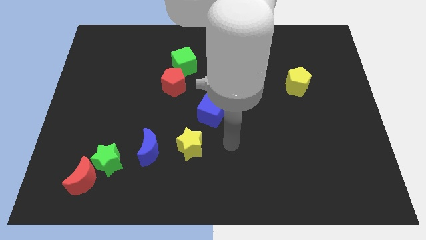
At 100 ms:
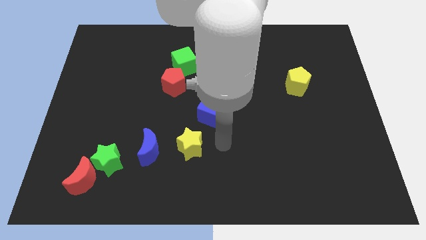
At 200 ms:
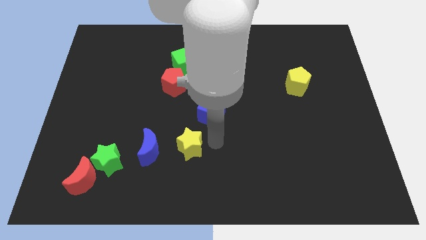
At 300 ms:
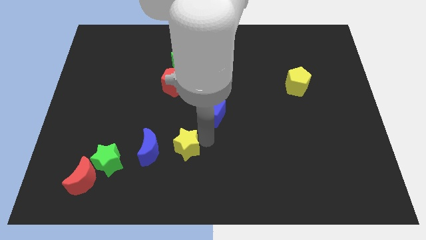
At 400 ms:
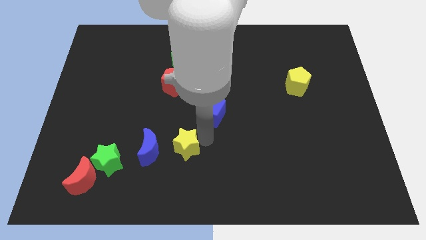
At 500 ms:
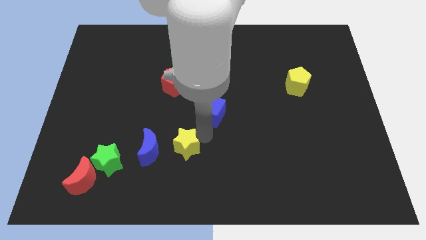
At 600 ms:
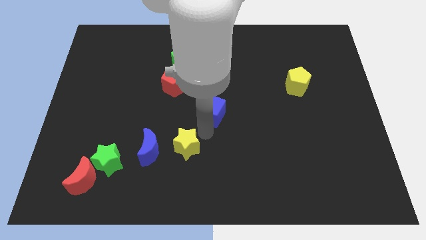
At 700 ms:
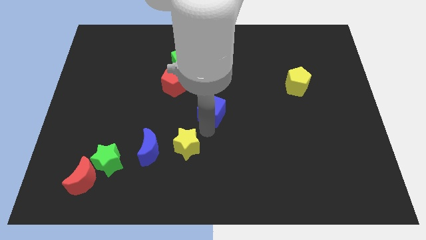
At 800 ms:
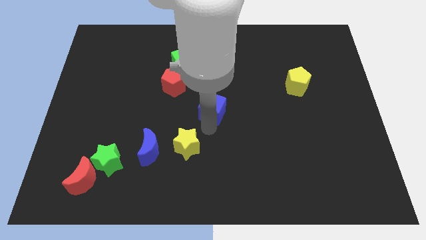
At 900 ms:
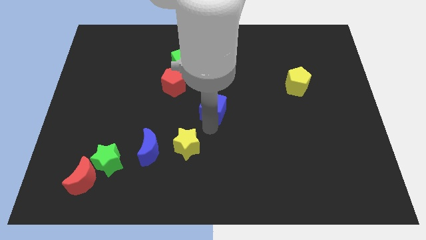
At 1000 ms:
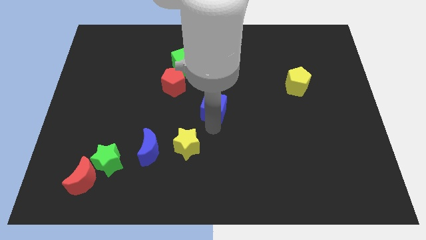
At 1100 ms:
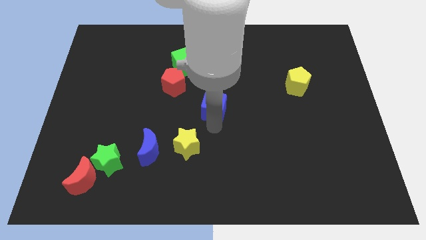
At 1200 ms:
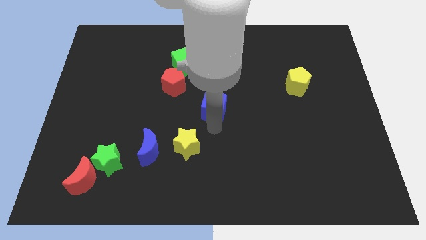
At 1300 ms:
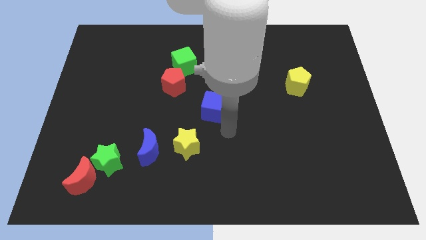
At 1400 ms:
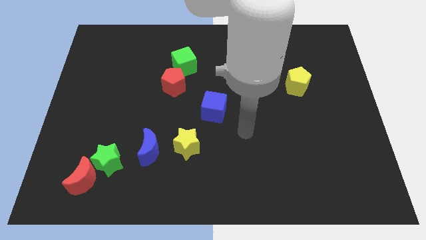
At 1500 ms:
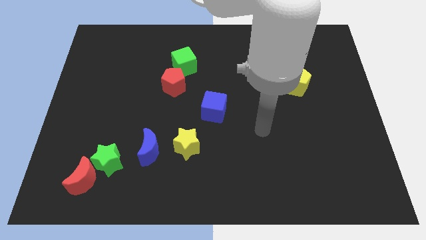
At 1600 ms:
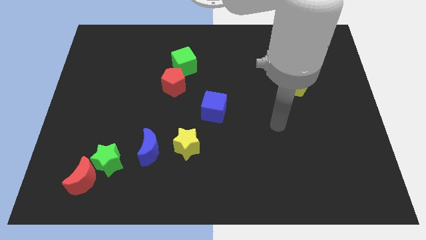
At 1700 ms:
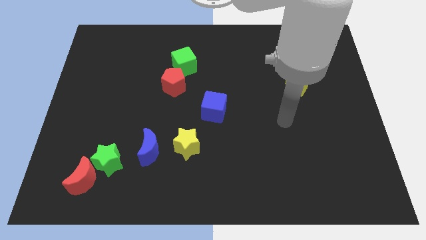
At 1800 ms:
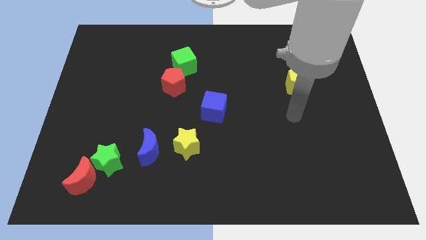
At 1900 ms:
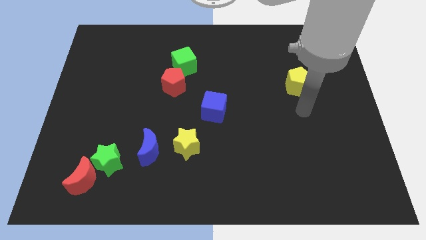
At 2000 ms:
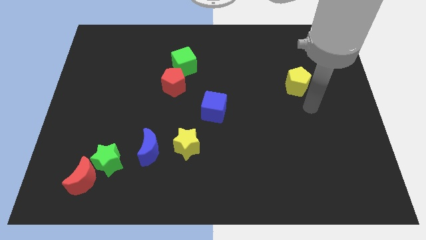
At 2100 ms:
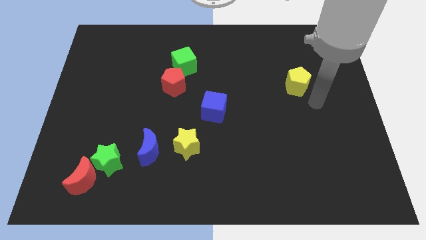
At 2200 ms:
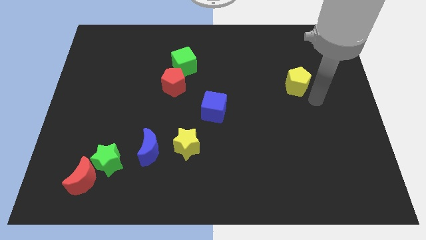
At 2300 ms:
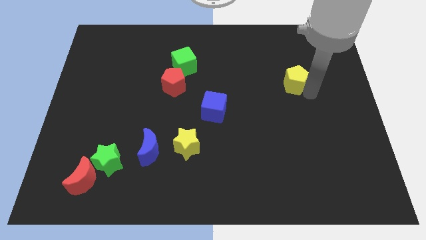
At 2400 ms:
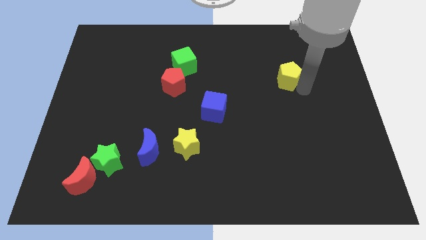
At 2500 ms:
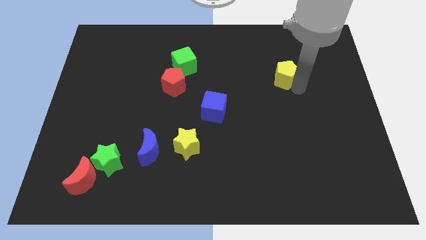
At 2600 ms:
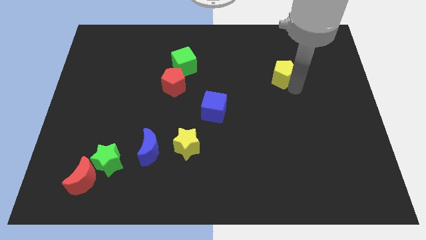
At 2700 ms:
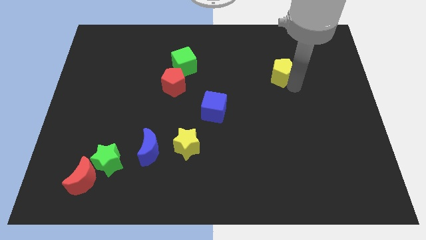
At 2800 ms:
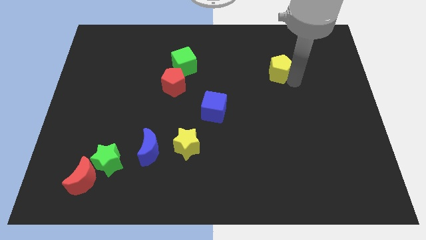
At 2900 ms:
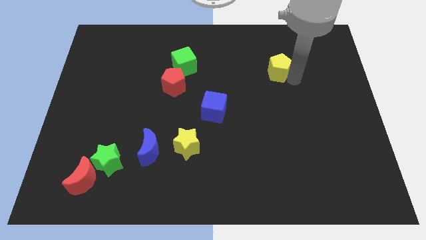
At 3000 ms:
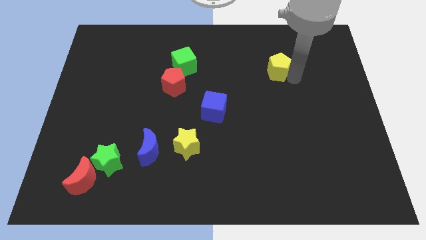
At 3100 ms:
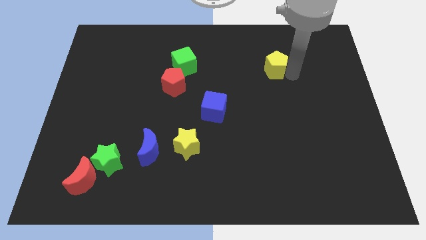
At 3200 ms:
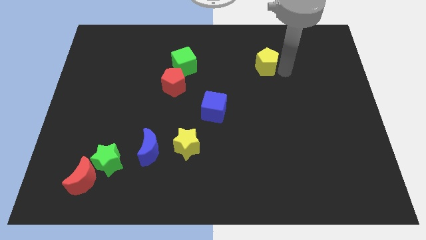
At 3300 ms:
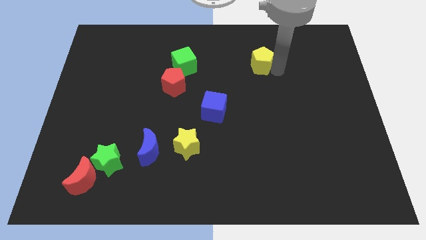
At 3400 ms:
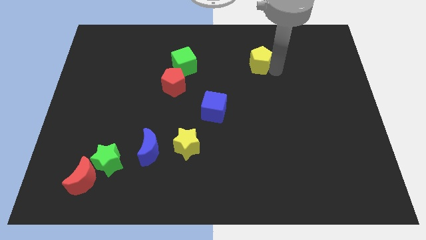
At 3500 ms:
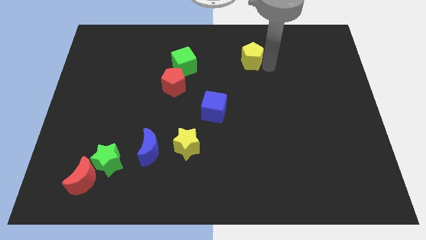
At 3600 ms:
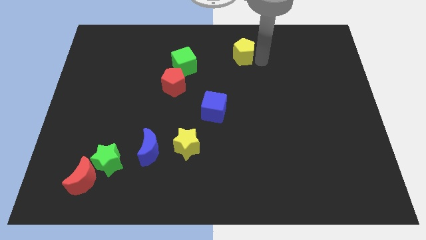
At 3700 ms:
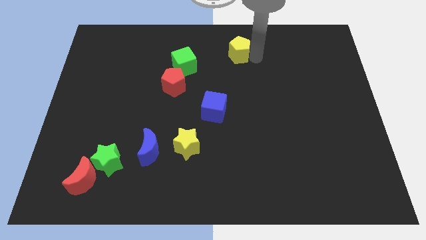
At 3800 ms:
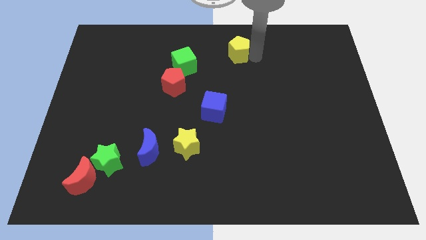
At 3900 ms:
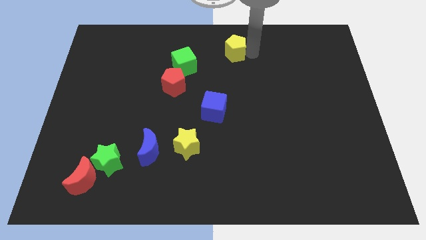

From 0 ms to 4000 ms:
move yellow pentagon towards the top center

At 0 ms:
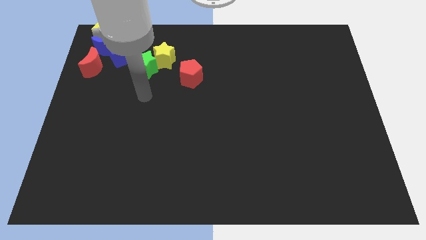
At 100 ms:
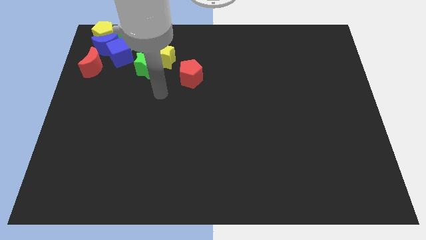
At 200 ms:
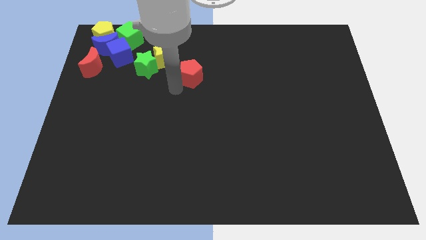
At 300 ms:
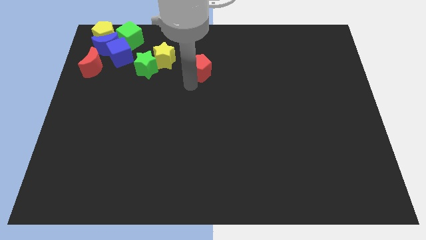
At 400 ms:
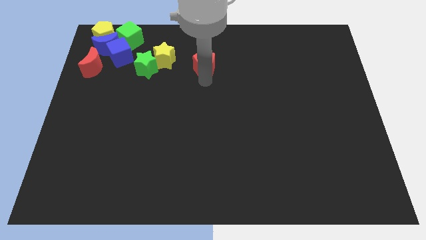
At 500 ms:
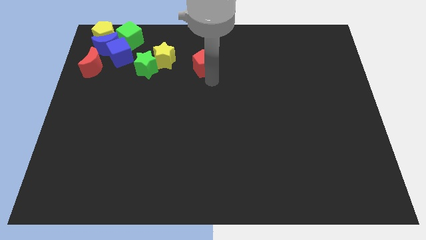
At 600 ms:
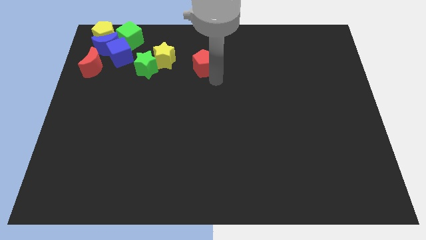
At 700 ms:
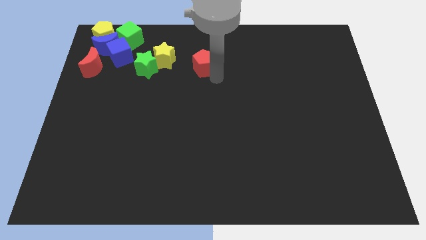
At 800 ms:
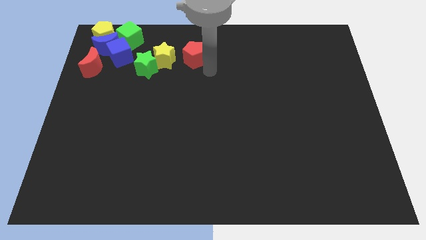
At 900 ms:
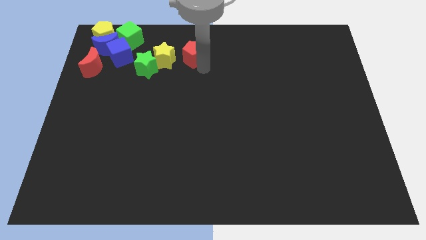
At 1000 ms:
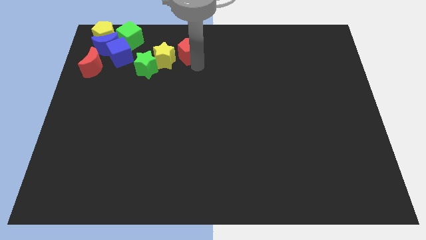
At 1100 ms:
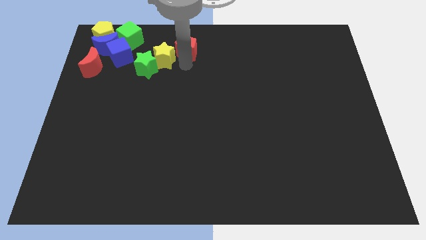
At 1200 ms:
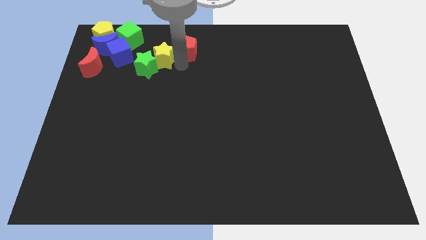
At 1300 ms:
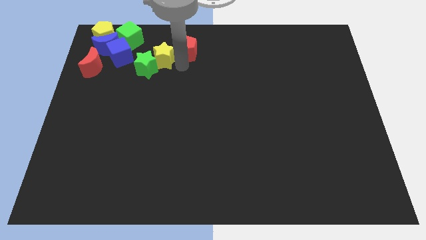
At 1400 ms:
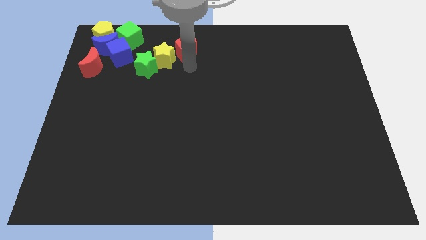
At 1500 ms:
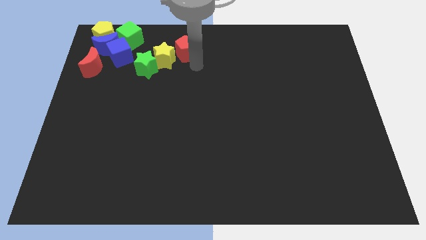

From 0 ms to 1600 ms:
move the red pentagon top right to the yellow star

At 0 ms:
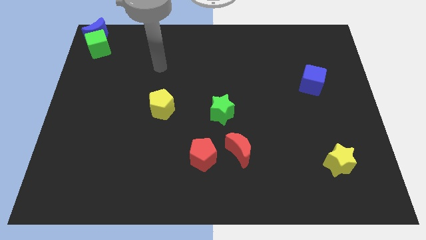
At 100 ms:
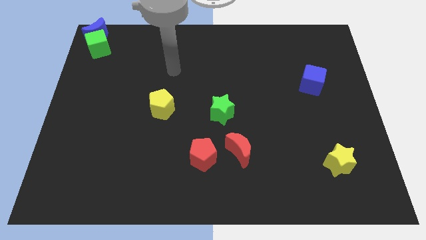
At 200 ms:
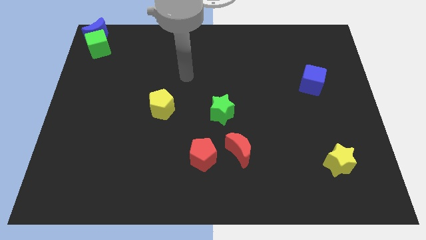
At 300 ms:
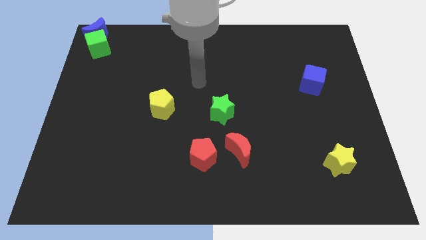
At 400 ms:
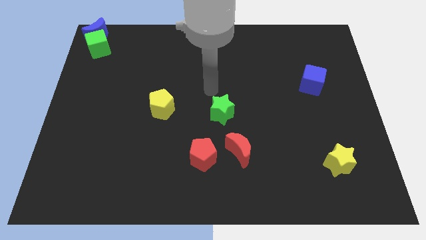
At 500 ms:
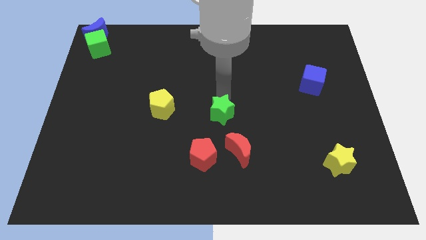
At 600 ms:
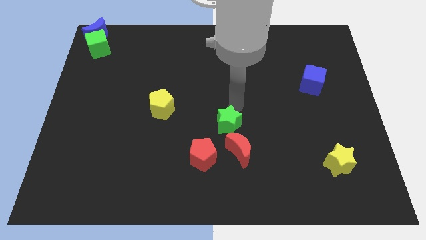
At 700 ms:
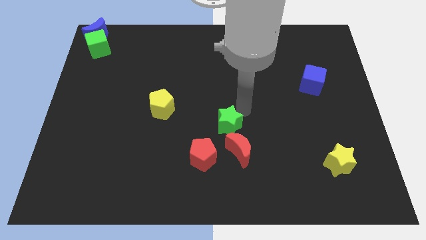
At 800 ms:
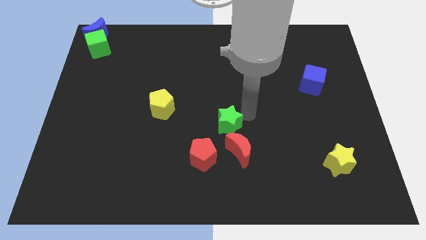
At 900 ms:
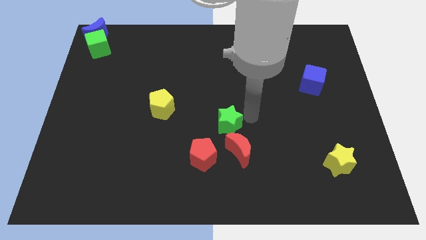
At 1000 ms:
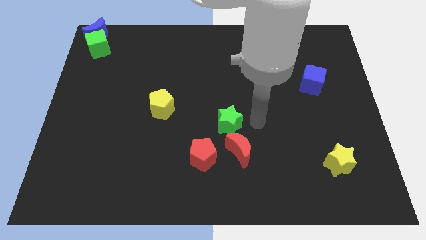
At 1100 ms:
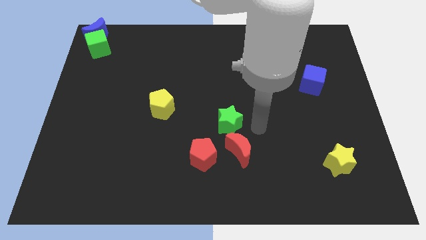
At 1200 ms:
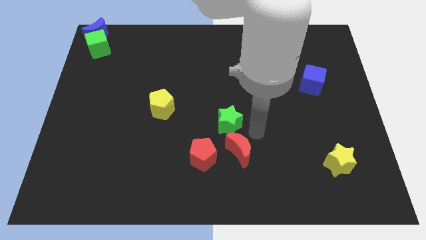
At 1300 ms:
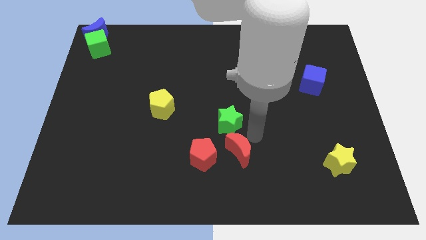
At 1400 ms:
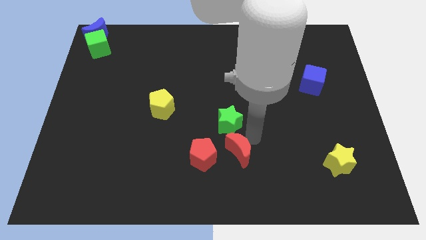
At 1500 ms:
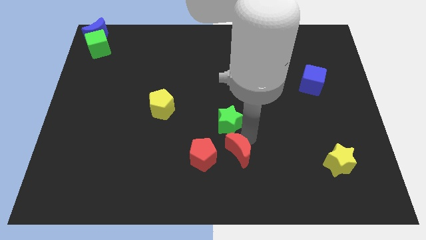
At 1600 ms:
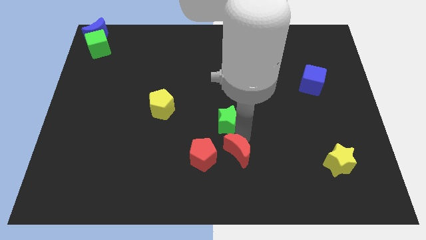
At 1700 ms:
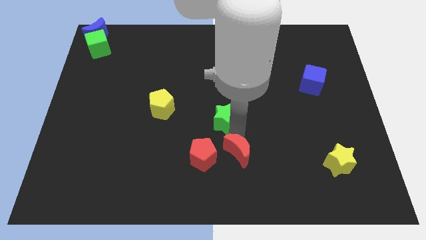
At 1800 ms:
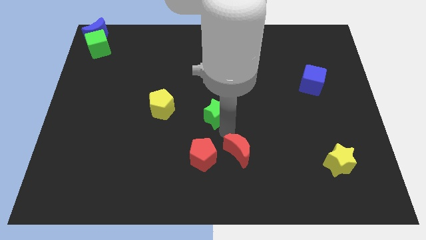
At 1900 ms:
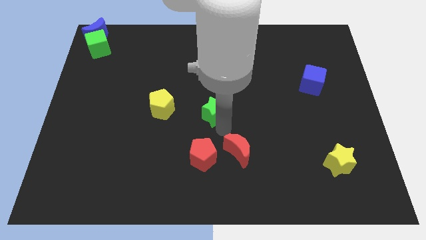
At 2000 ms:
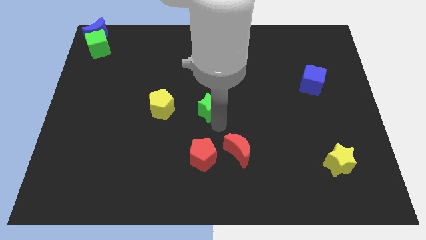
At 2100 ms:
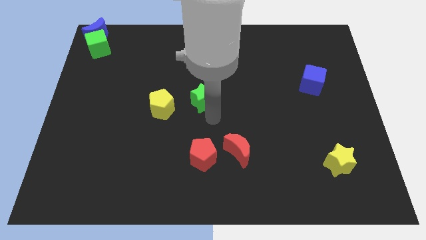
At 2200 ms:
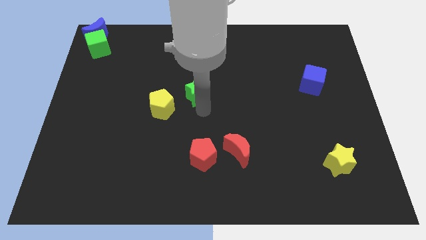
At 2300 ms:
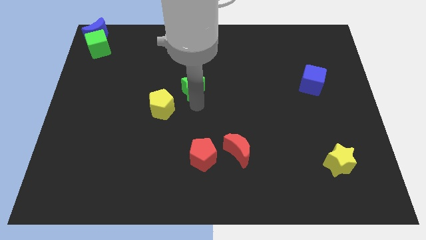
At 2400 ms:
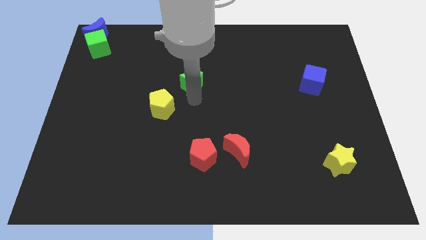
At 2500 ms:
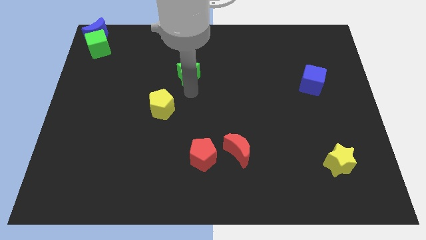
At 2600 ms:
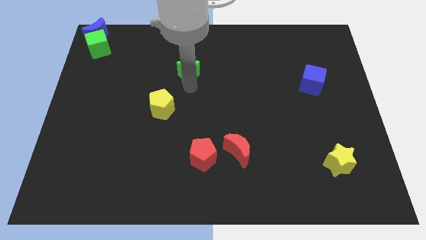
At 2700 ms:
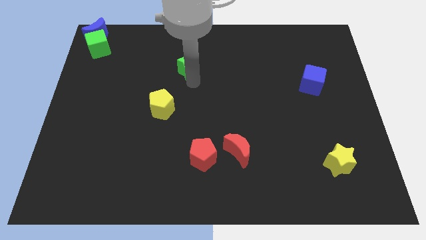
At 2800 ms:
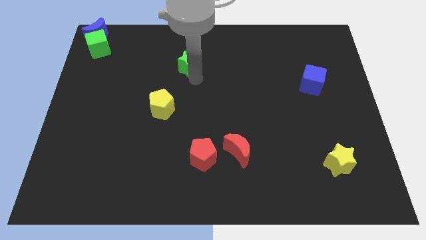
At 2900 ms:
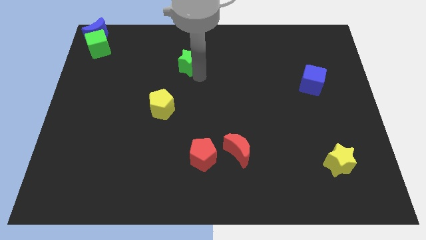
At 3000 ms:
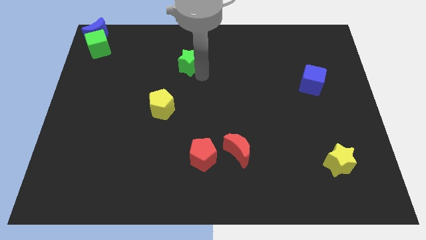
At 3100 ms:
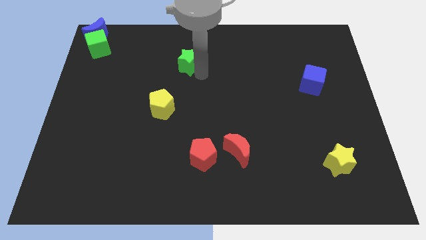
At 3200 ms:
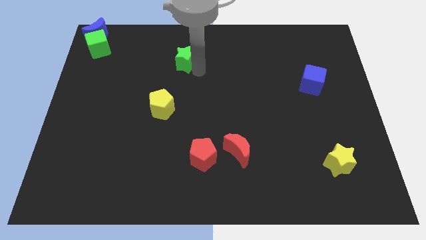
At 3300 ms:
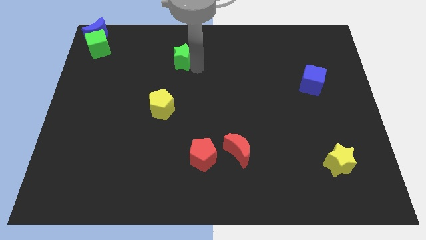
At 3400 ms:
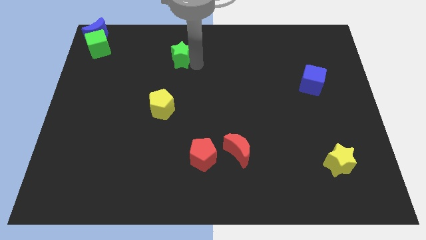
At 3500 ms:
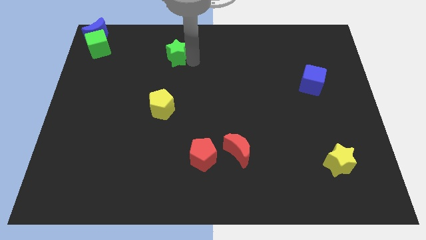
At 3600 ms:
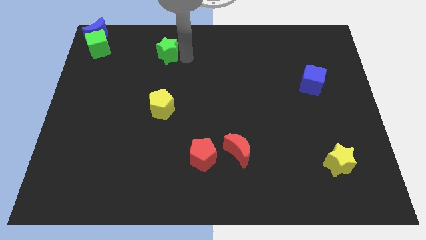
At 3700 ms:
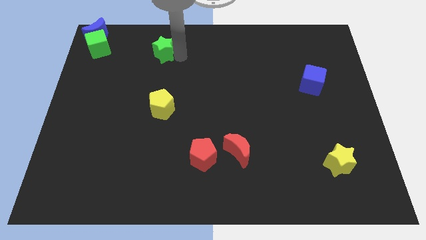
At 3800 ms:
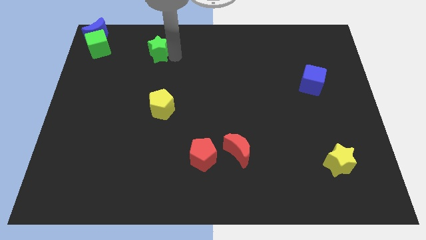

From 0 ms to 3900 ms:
place the green star above the yellow pentagon
